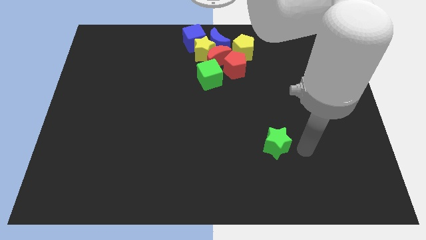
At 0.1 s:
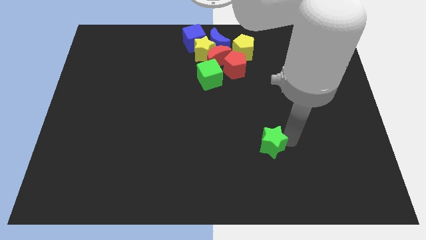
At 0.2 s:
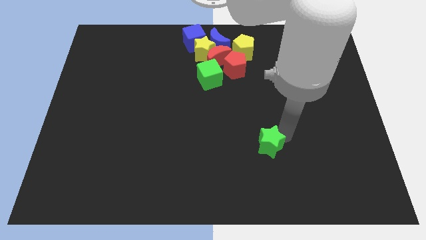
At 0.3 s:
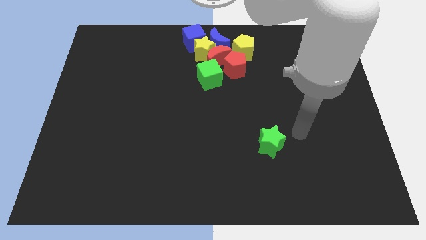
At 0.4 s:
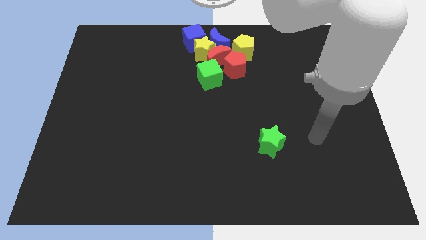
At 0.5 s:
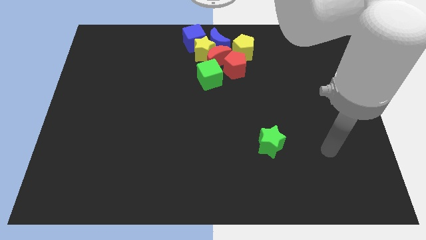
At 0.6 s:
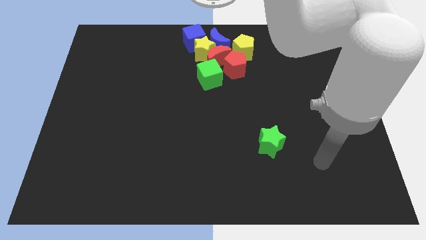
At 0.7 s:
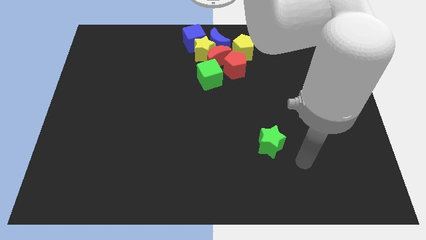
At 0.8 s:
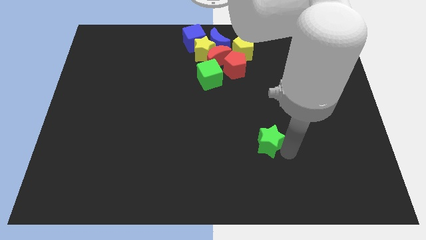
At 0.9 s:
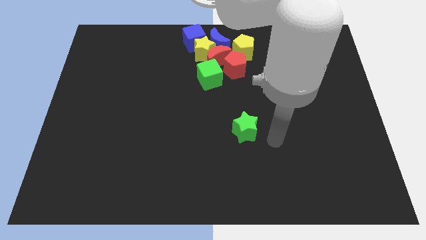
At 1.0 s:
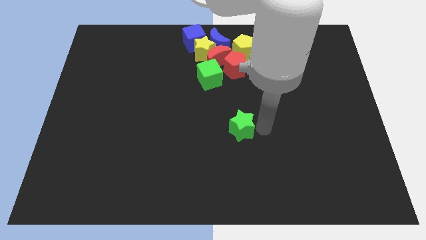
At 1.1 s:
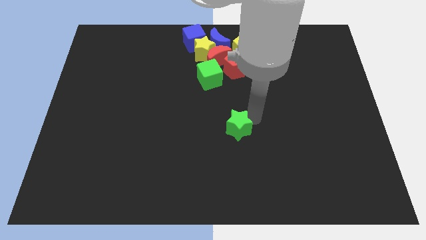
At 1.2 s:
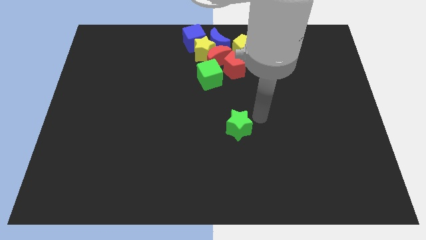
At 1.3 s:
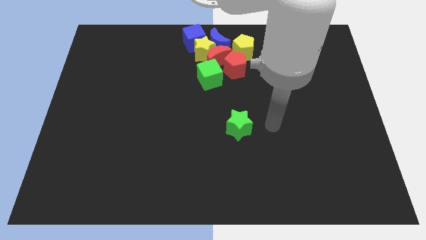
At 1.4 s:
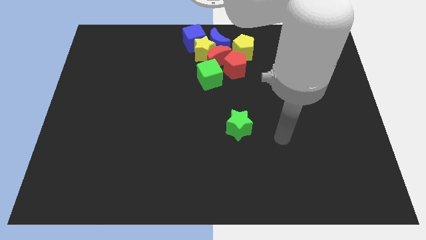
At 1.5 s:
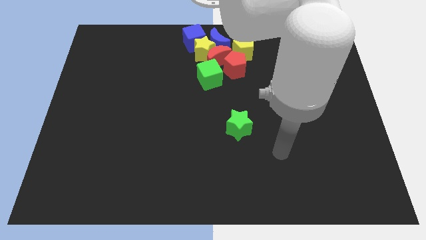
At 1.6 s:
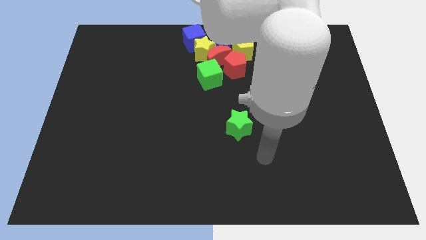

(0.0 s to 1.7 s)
push the green star vertically below the red pentagon

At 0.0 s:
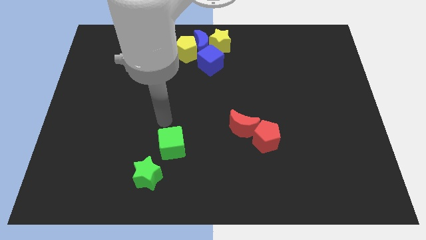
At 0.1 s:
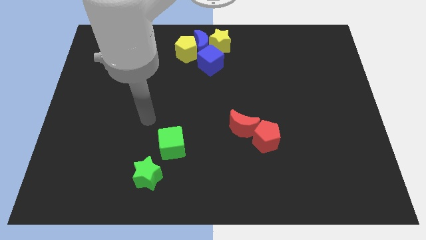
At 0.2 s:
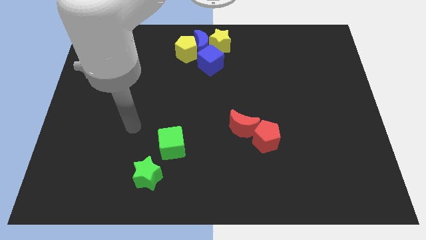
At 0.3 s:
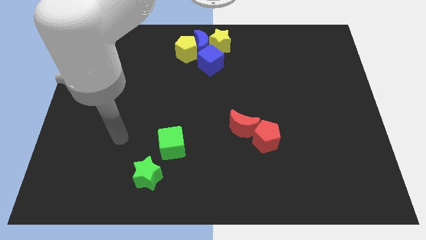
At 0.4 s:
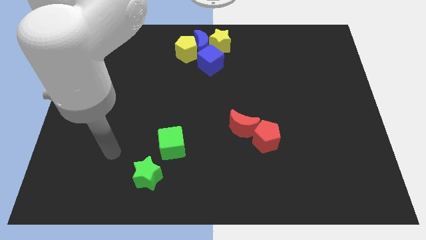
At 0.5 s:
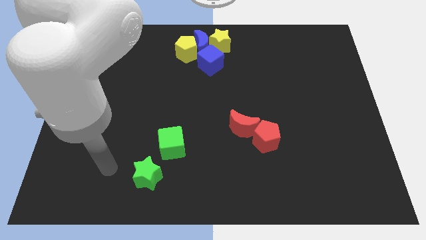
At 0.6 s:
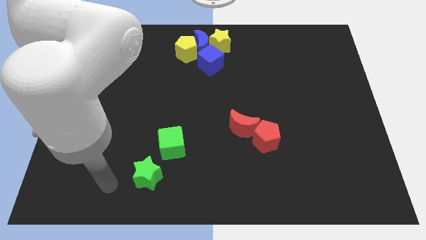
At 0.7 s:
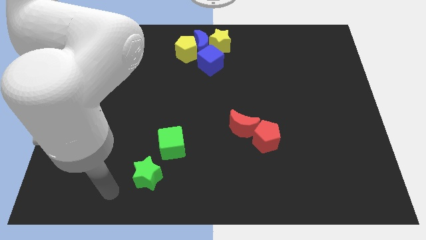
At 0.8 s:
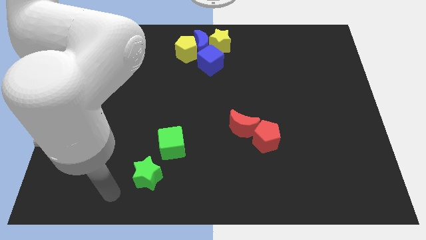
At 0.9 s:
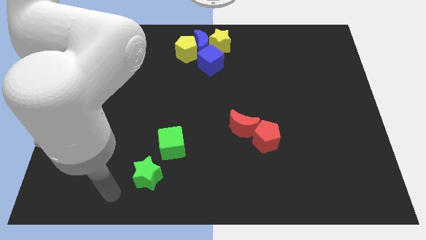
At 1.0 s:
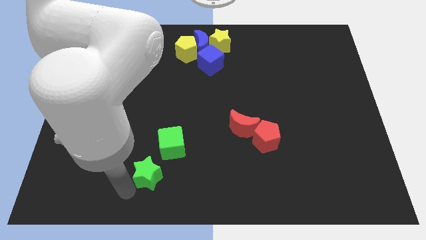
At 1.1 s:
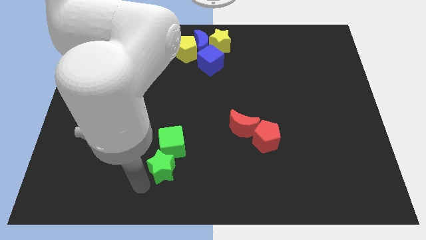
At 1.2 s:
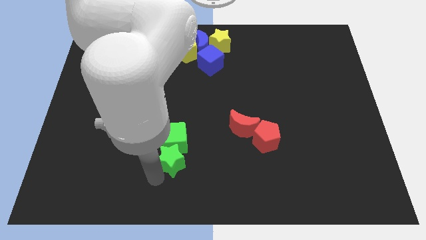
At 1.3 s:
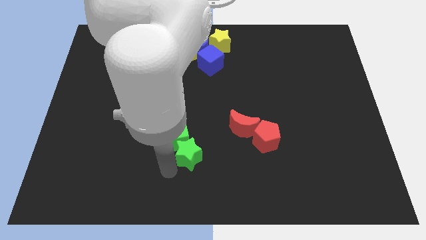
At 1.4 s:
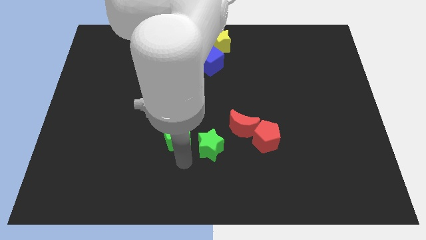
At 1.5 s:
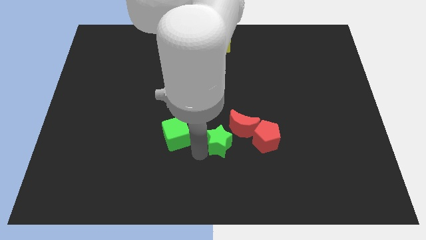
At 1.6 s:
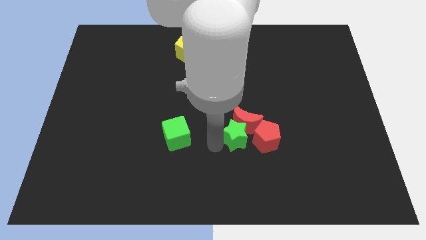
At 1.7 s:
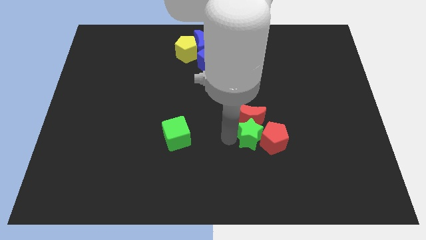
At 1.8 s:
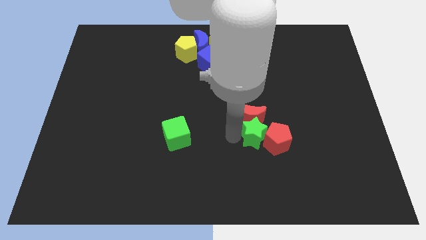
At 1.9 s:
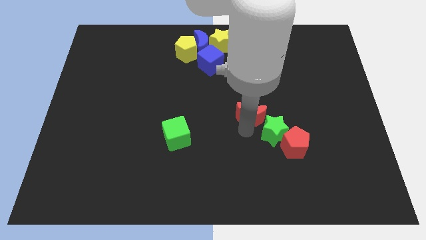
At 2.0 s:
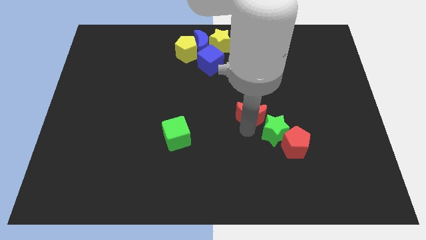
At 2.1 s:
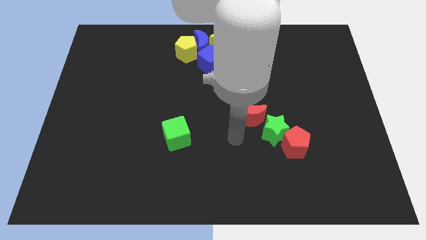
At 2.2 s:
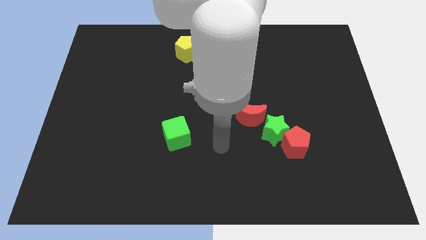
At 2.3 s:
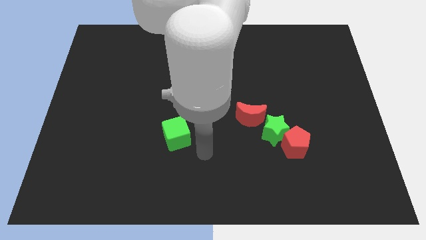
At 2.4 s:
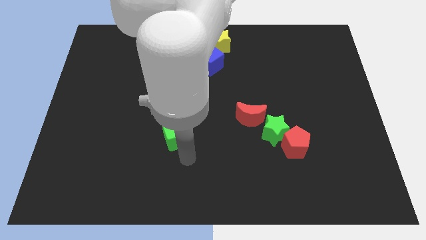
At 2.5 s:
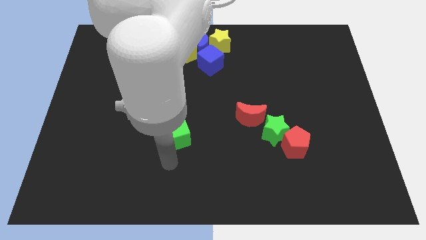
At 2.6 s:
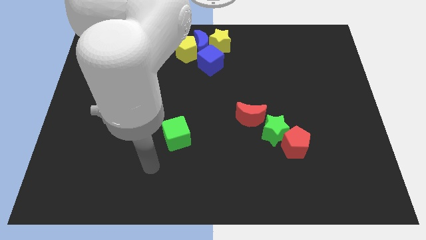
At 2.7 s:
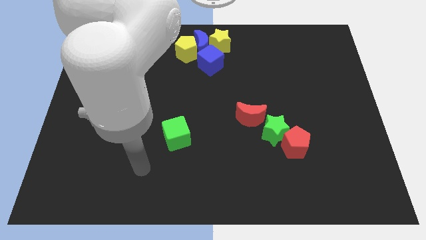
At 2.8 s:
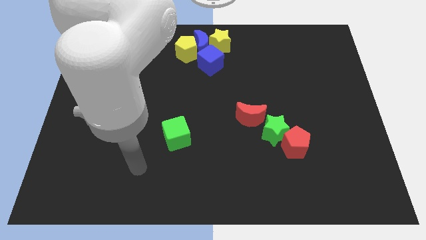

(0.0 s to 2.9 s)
place the green star in between the red blocks

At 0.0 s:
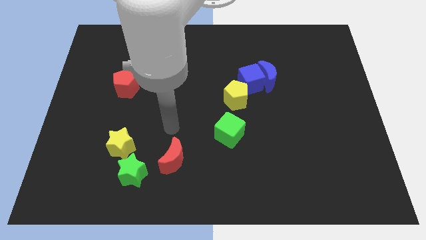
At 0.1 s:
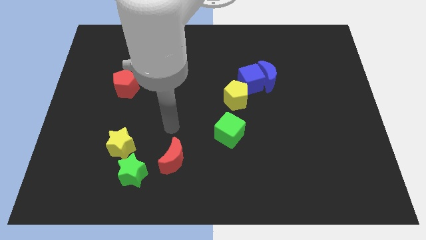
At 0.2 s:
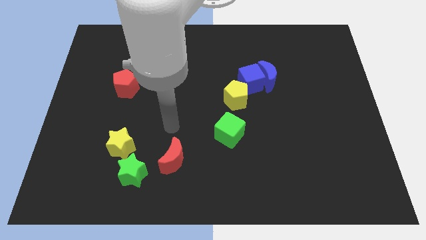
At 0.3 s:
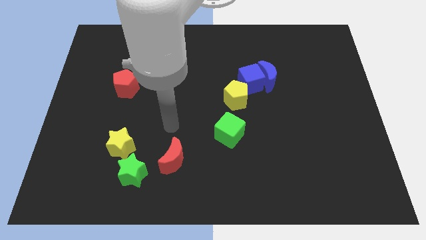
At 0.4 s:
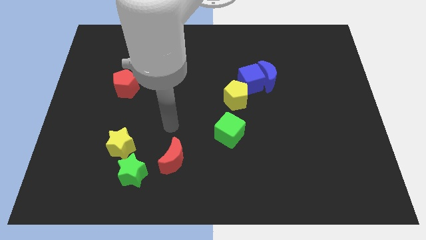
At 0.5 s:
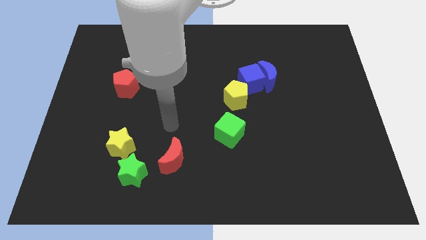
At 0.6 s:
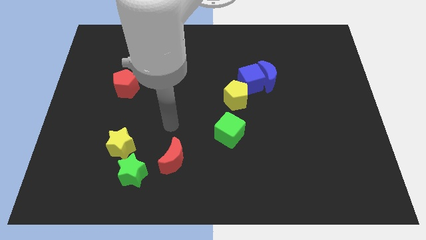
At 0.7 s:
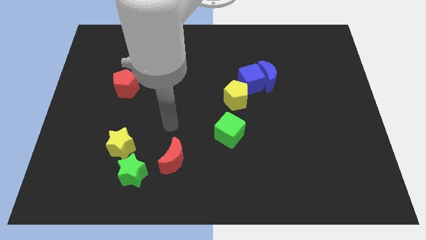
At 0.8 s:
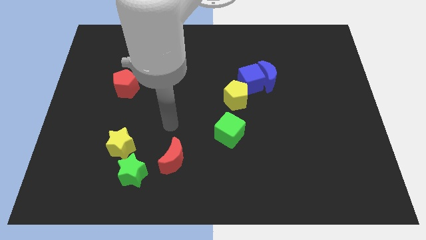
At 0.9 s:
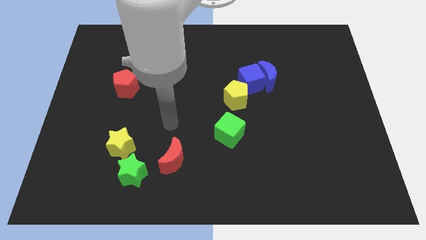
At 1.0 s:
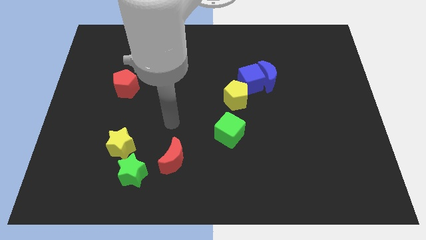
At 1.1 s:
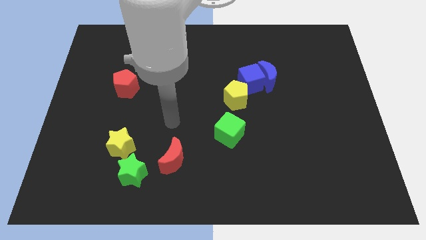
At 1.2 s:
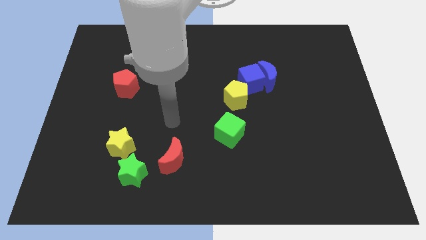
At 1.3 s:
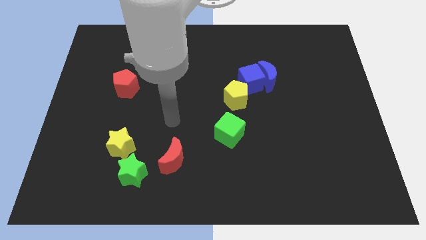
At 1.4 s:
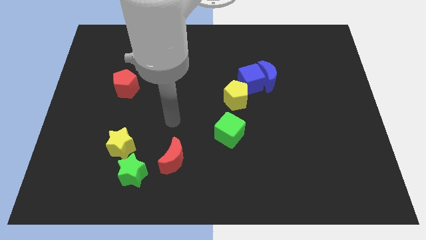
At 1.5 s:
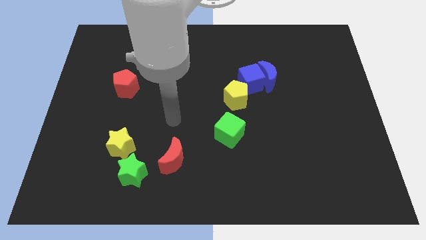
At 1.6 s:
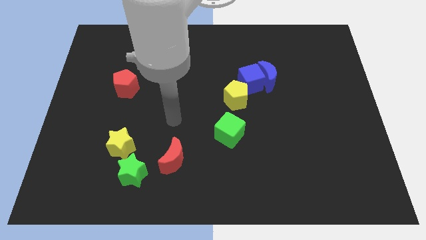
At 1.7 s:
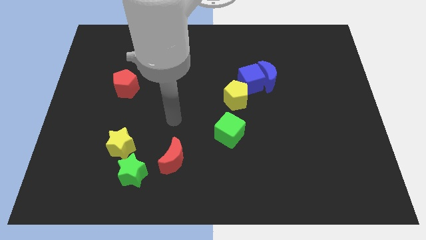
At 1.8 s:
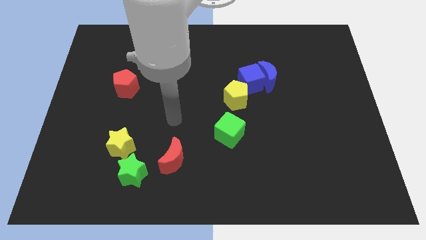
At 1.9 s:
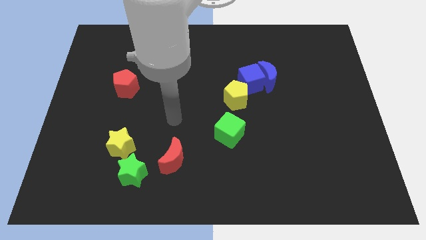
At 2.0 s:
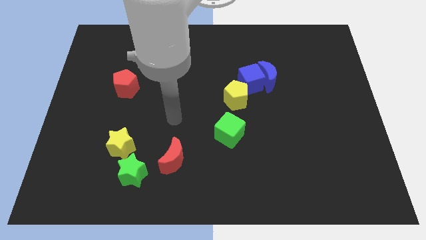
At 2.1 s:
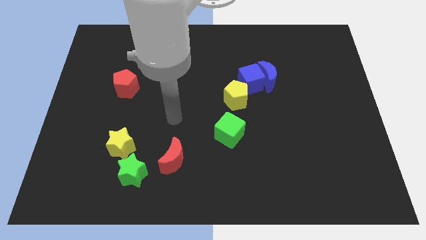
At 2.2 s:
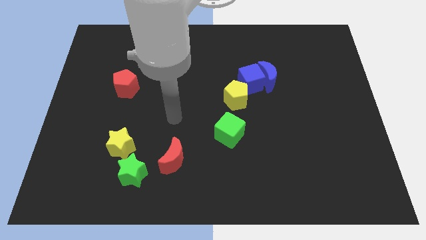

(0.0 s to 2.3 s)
place your arm above the red moon

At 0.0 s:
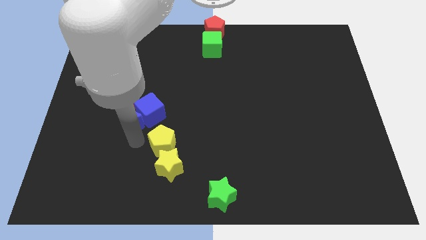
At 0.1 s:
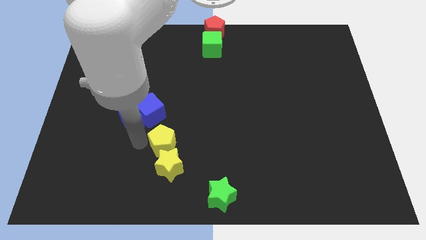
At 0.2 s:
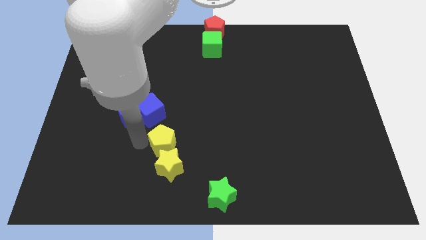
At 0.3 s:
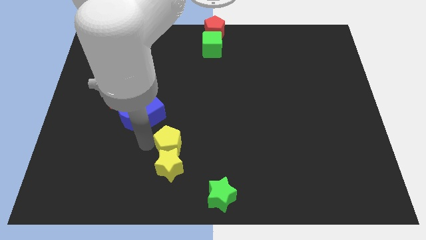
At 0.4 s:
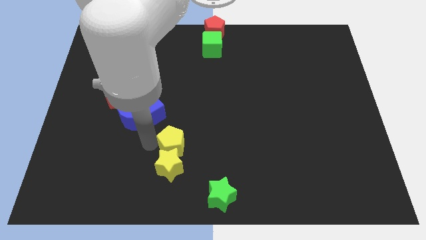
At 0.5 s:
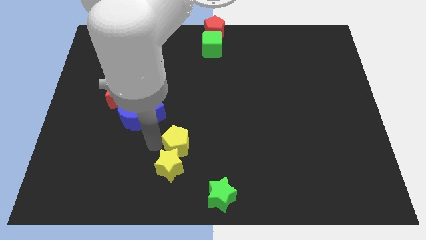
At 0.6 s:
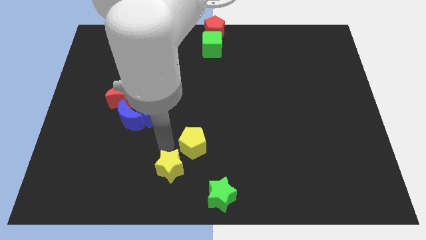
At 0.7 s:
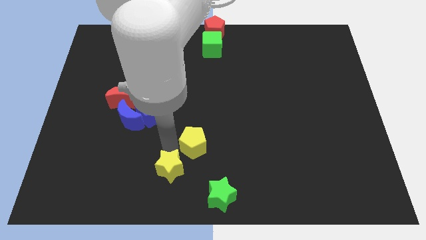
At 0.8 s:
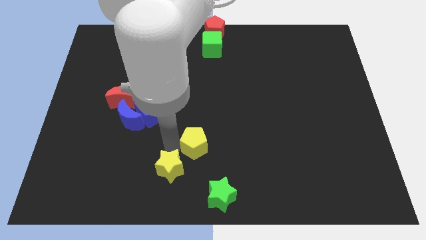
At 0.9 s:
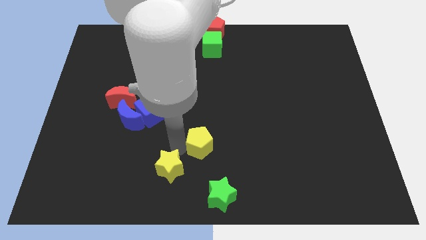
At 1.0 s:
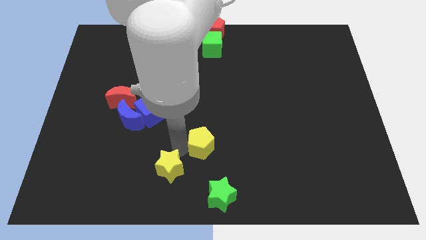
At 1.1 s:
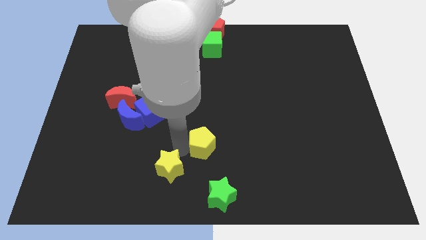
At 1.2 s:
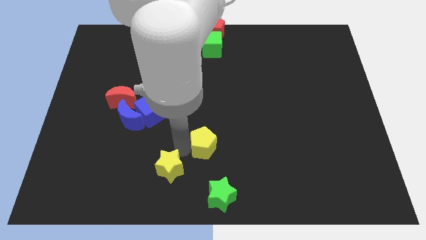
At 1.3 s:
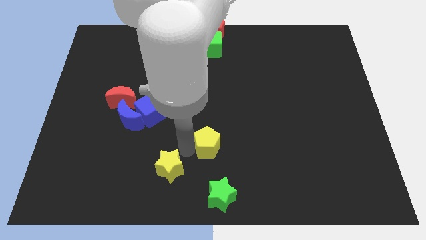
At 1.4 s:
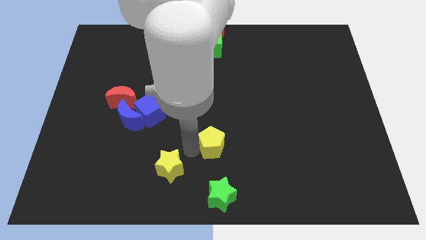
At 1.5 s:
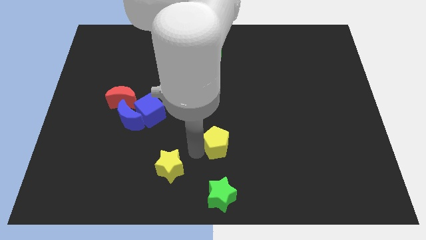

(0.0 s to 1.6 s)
separate yellow pentagon from the yellow star

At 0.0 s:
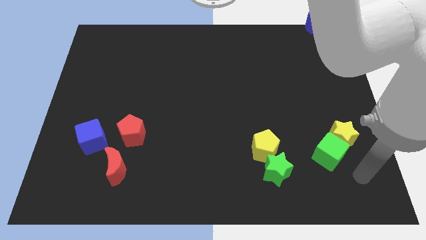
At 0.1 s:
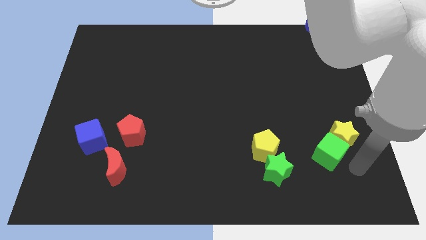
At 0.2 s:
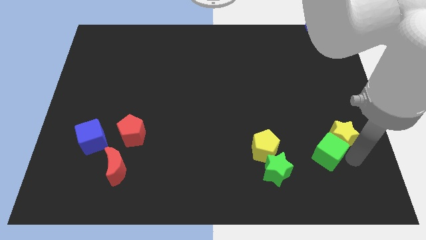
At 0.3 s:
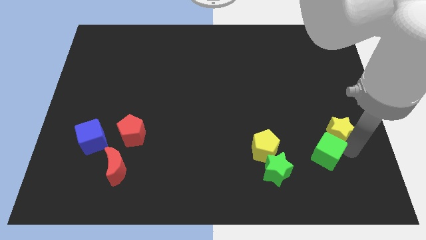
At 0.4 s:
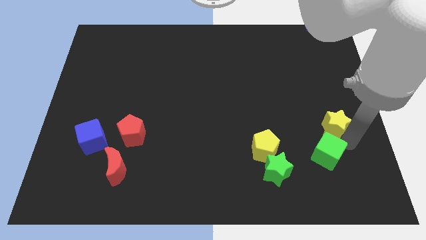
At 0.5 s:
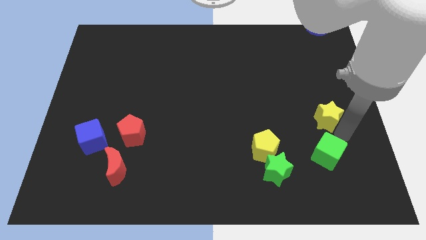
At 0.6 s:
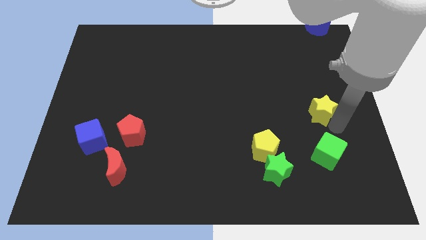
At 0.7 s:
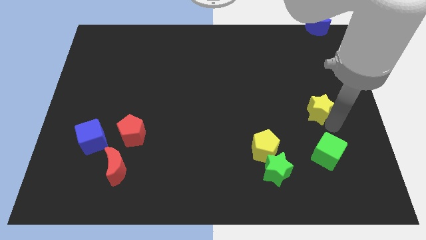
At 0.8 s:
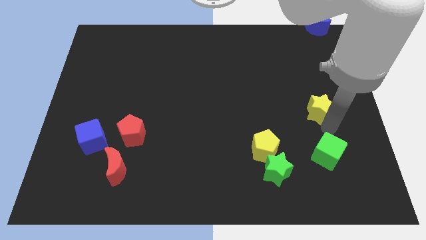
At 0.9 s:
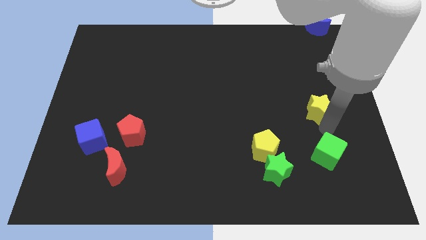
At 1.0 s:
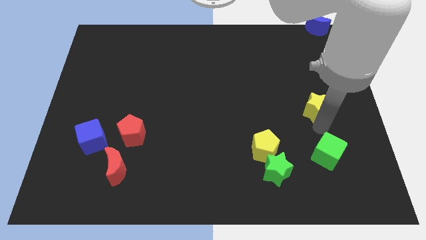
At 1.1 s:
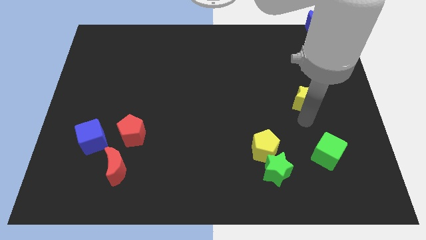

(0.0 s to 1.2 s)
separate the yellow star from green cube
